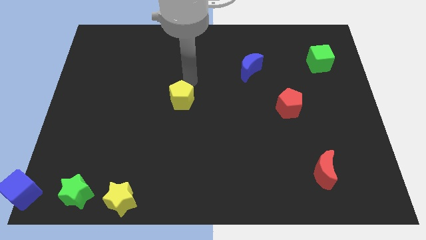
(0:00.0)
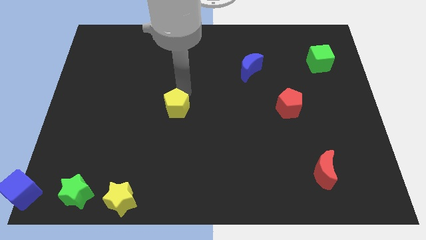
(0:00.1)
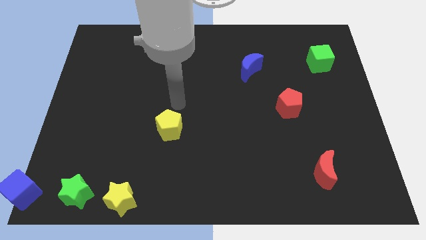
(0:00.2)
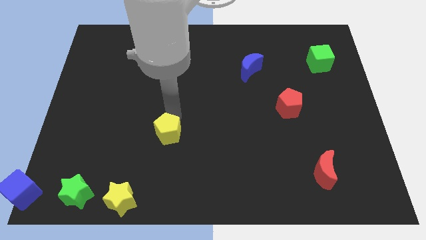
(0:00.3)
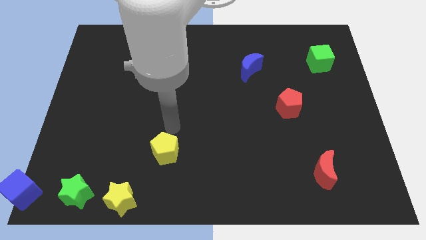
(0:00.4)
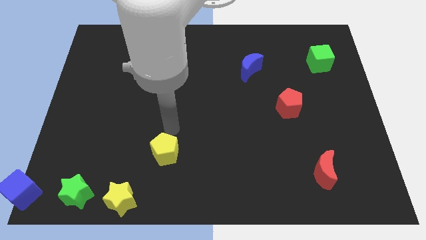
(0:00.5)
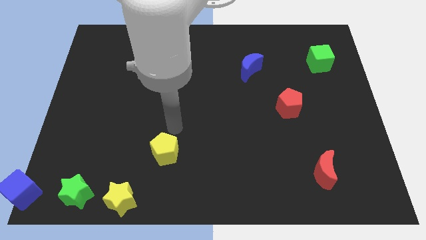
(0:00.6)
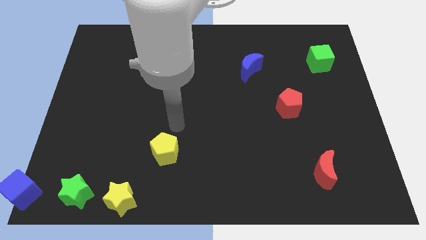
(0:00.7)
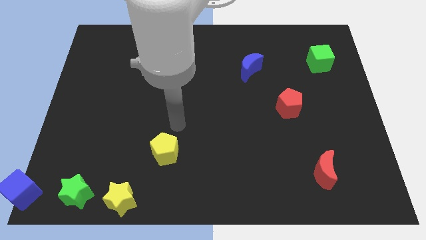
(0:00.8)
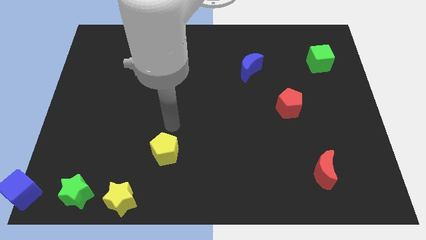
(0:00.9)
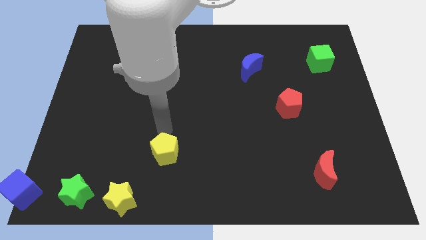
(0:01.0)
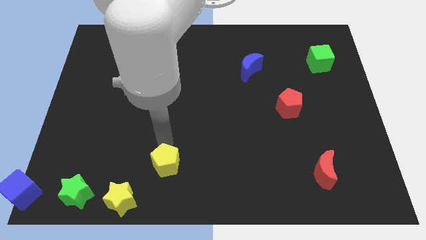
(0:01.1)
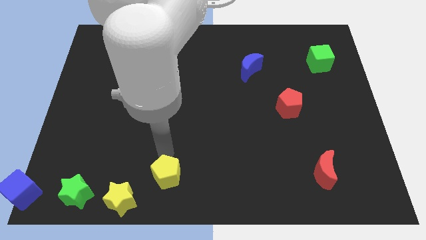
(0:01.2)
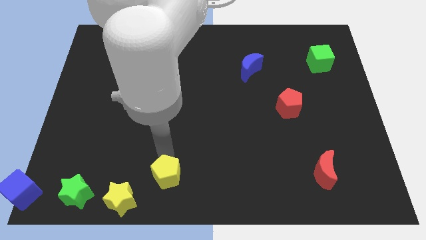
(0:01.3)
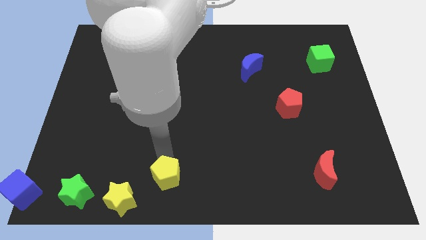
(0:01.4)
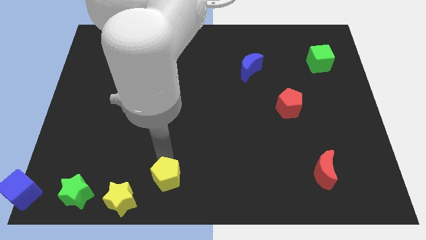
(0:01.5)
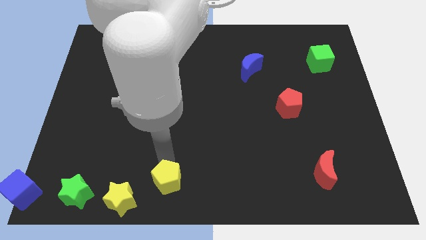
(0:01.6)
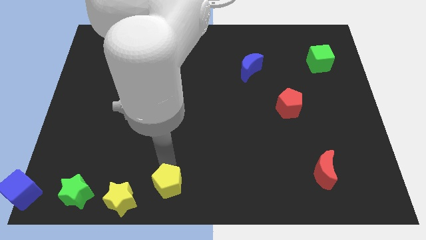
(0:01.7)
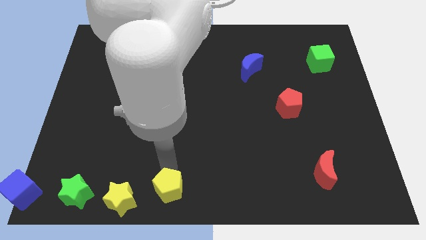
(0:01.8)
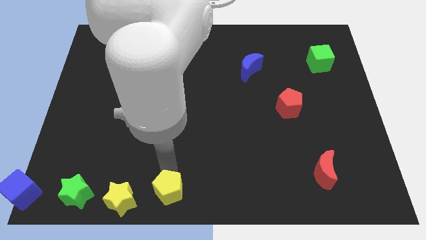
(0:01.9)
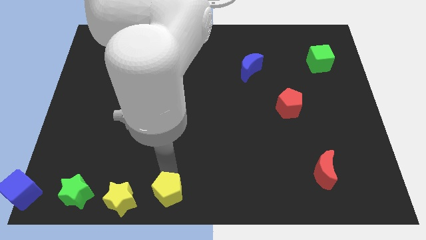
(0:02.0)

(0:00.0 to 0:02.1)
slide yellow pentagon to the right of yellow star

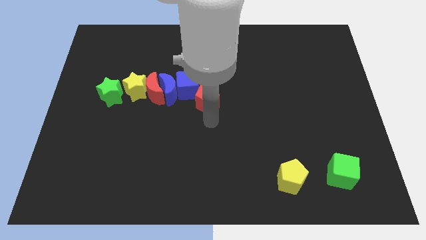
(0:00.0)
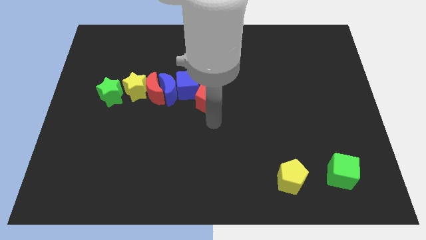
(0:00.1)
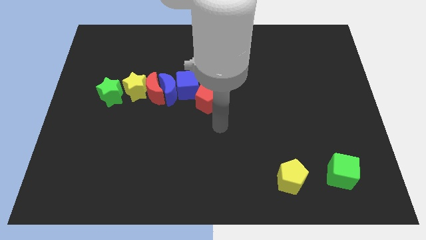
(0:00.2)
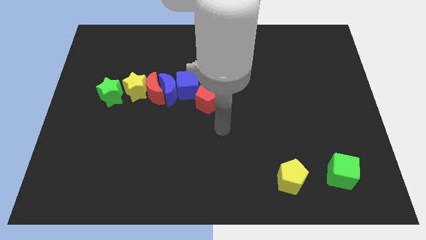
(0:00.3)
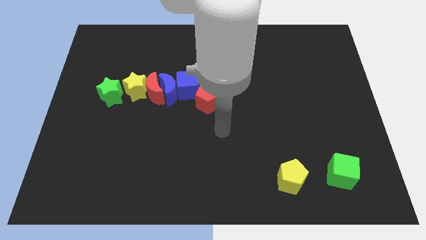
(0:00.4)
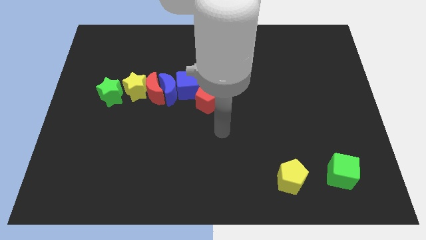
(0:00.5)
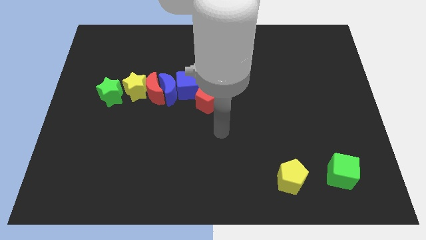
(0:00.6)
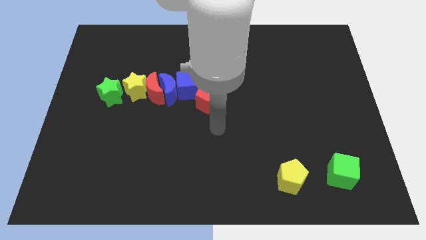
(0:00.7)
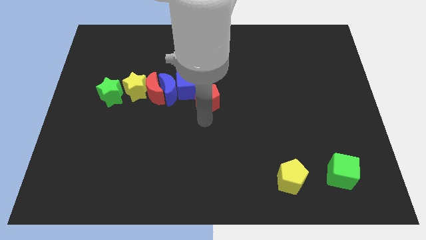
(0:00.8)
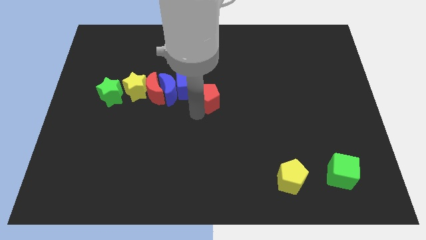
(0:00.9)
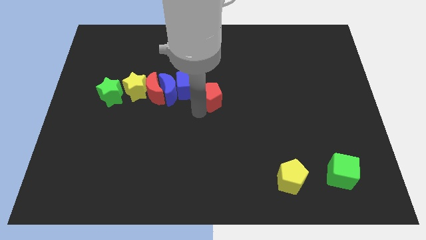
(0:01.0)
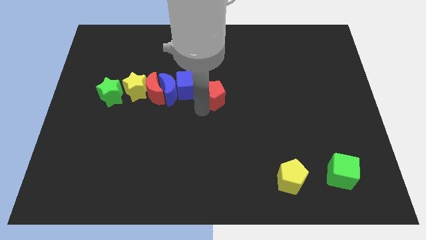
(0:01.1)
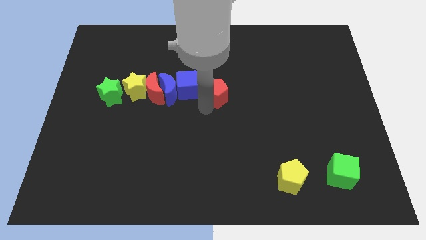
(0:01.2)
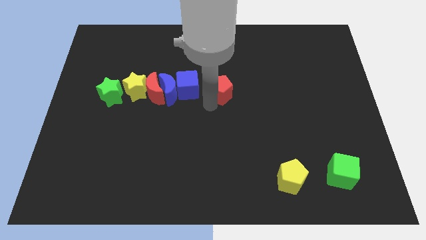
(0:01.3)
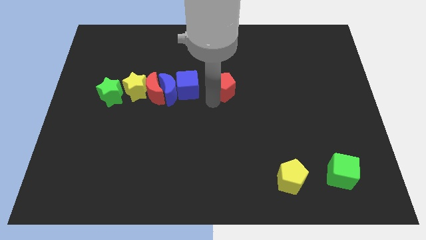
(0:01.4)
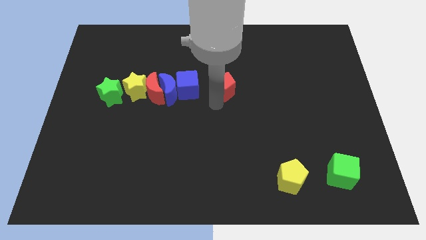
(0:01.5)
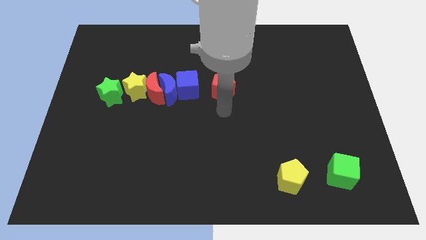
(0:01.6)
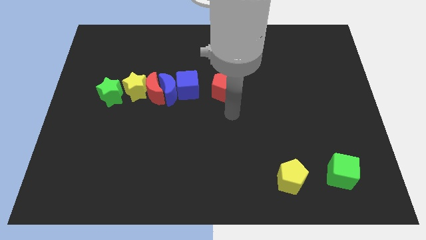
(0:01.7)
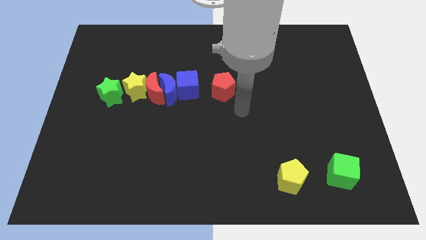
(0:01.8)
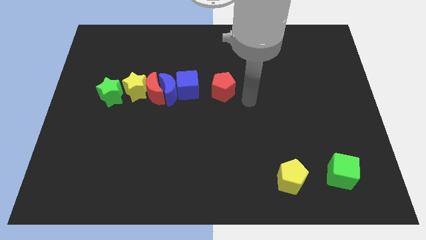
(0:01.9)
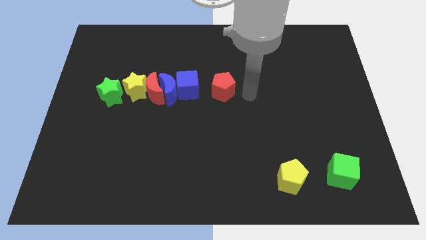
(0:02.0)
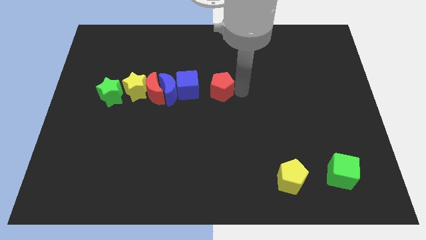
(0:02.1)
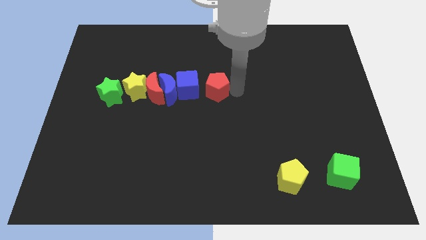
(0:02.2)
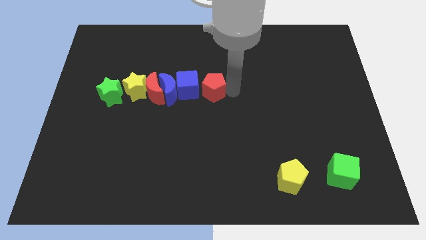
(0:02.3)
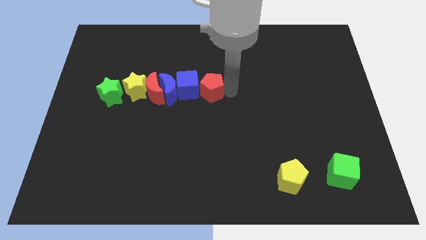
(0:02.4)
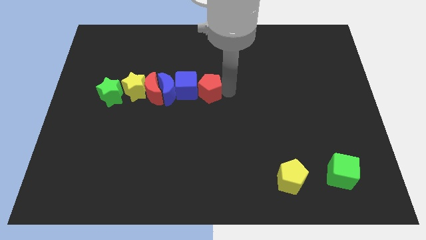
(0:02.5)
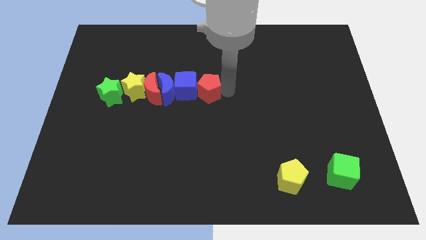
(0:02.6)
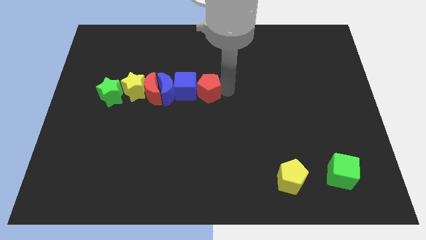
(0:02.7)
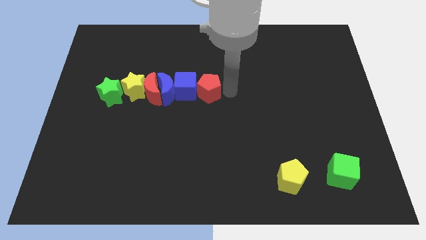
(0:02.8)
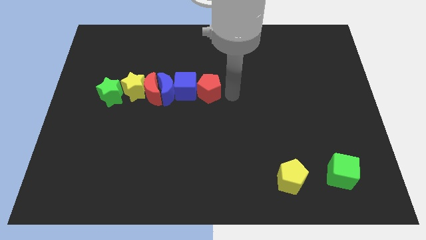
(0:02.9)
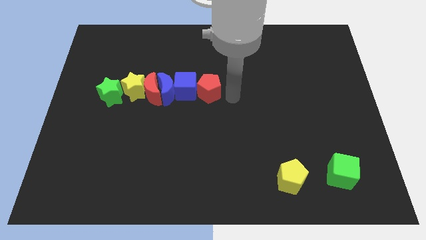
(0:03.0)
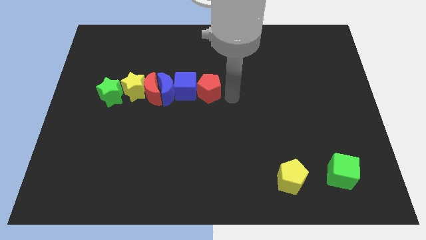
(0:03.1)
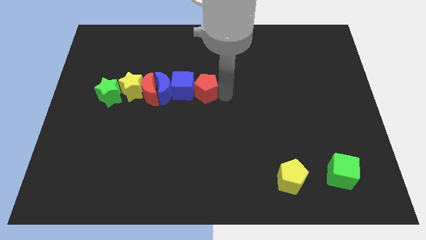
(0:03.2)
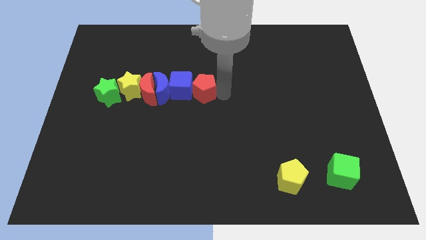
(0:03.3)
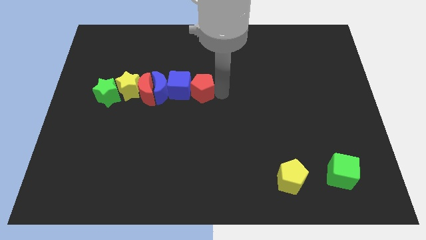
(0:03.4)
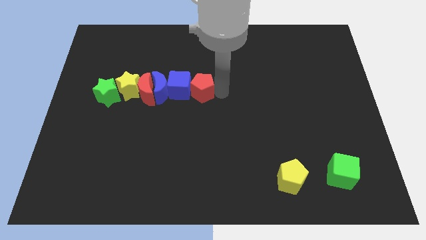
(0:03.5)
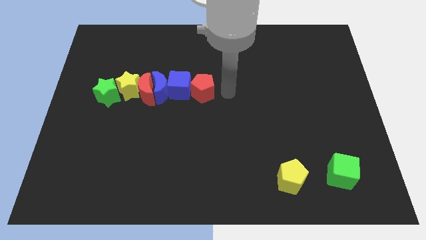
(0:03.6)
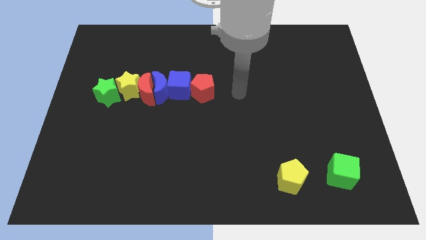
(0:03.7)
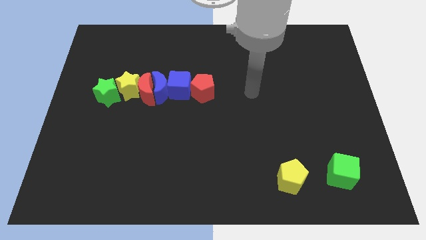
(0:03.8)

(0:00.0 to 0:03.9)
push red pentagon to the right of blue cube

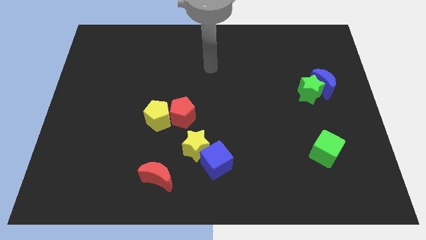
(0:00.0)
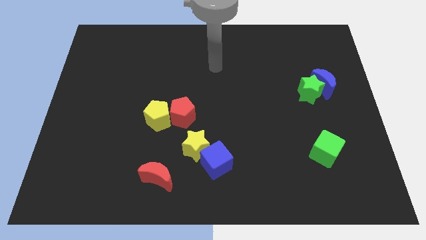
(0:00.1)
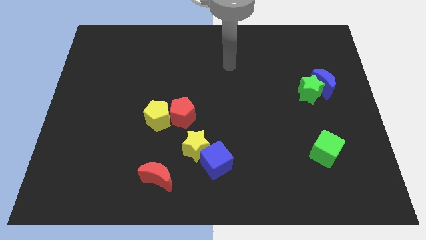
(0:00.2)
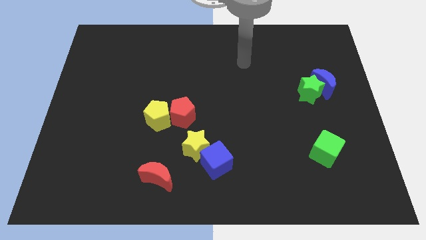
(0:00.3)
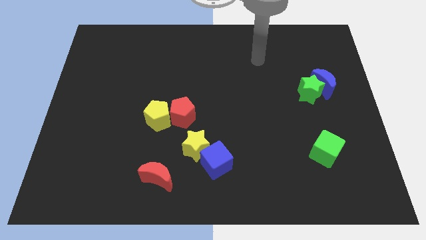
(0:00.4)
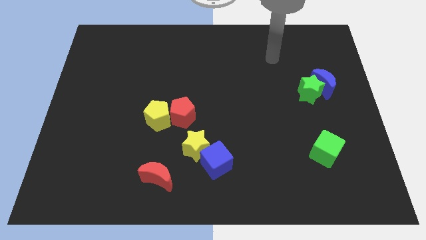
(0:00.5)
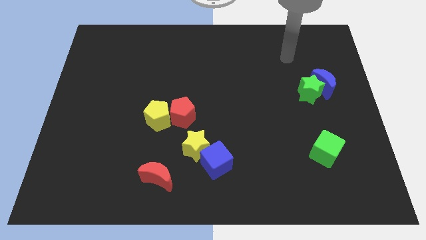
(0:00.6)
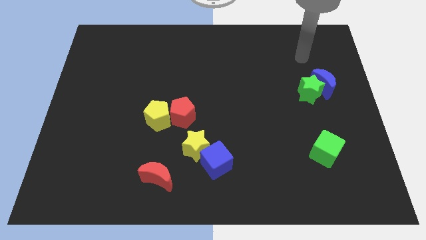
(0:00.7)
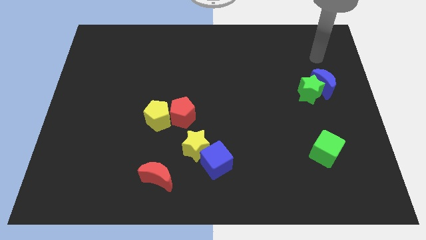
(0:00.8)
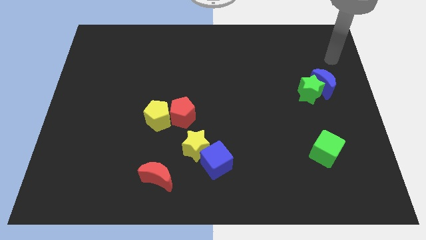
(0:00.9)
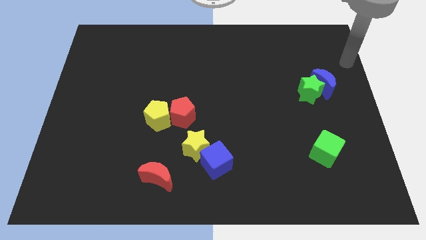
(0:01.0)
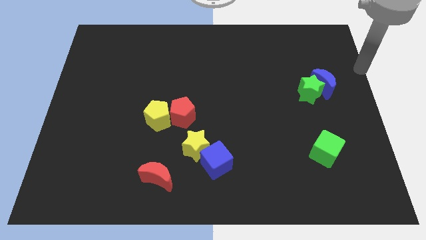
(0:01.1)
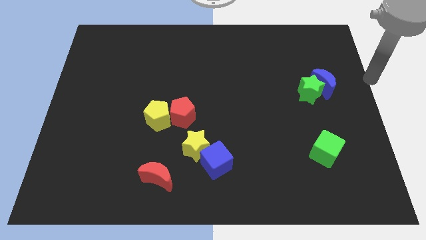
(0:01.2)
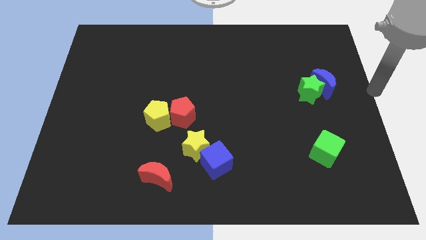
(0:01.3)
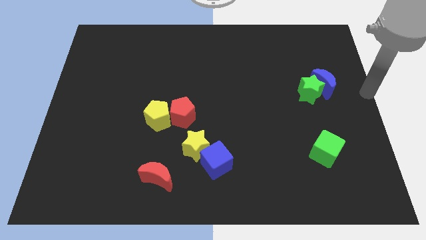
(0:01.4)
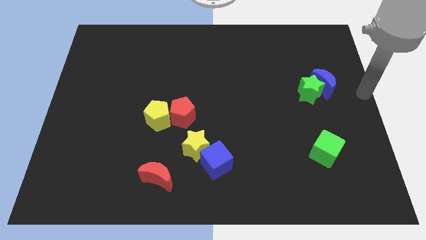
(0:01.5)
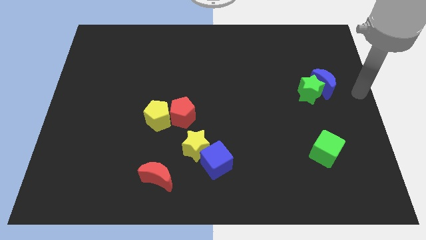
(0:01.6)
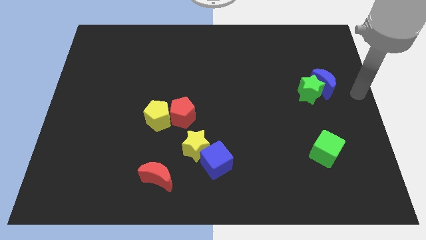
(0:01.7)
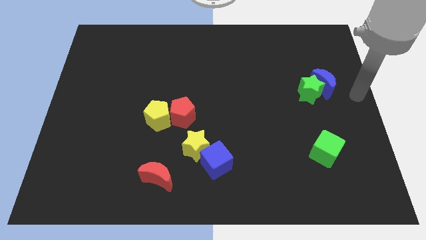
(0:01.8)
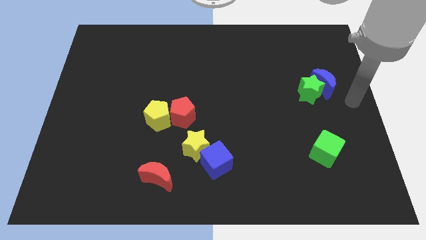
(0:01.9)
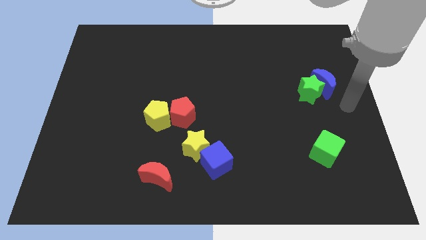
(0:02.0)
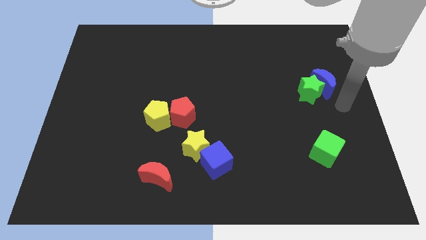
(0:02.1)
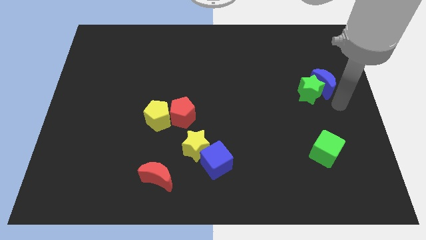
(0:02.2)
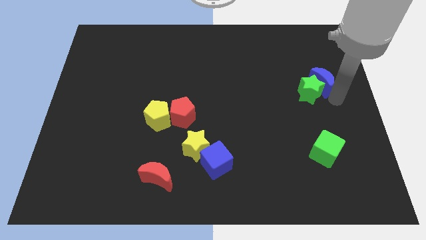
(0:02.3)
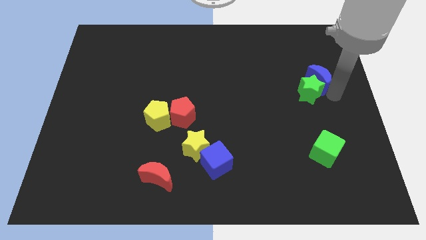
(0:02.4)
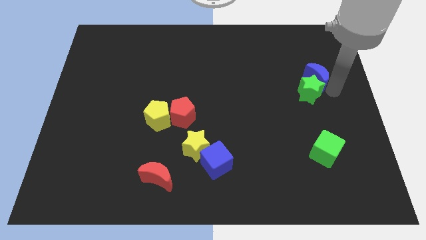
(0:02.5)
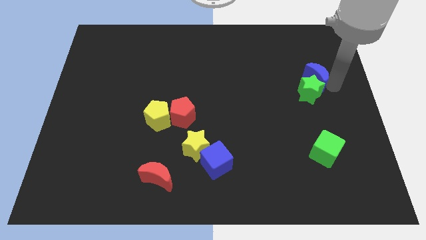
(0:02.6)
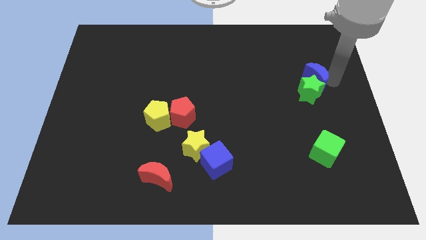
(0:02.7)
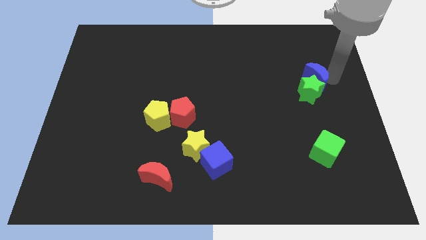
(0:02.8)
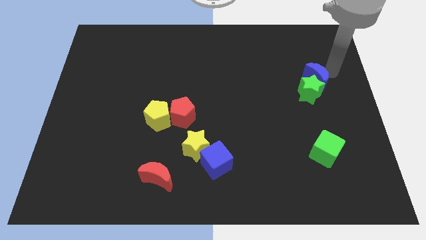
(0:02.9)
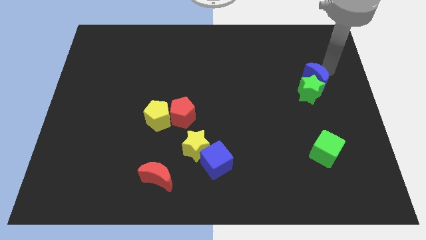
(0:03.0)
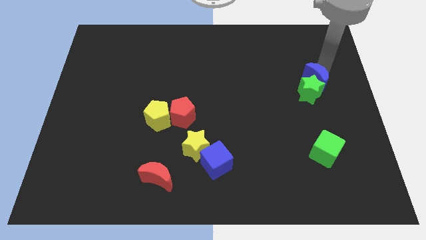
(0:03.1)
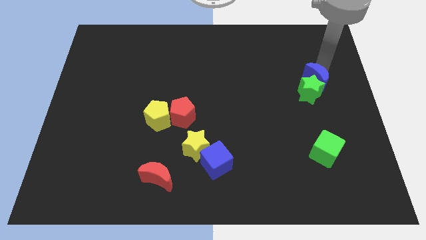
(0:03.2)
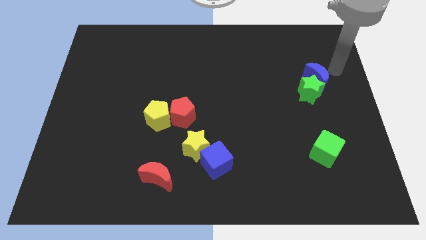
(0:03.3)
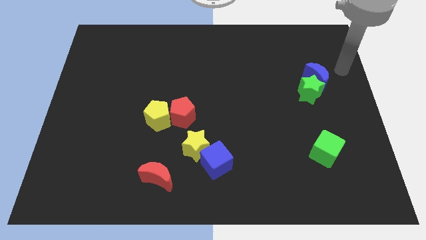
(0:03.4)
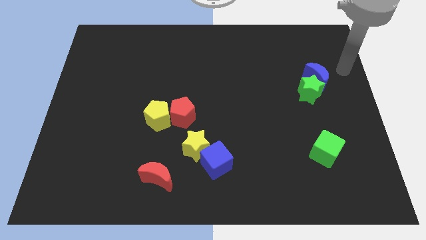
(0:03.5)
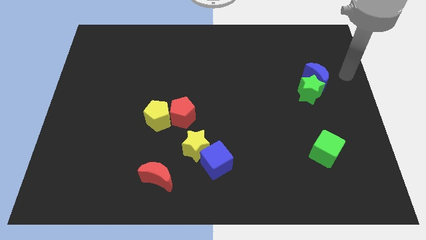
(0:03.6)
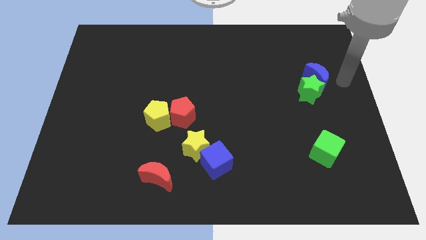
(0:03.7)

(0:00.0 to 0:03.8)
go and tap the blue crescent
